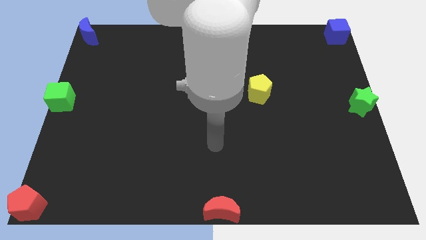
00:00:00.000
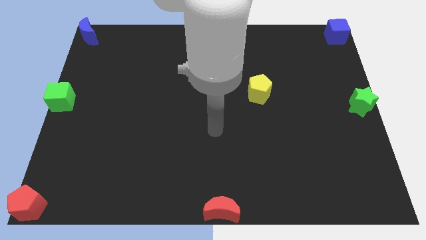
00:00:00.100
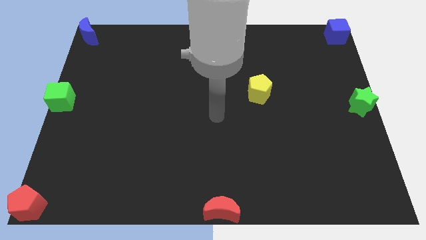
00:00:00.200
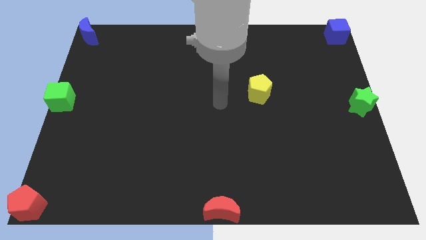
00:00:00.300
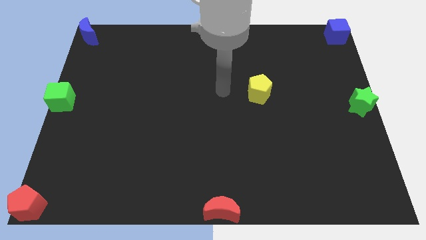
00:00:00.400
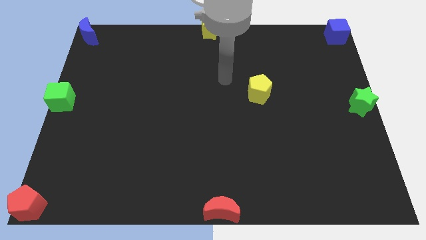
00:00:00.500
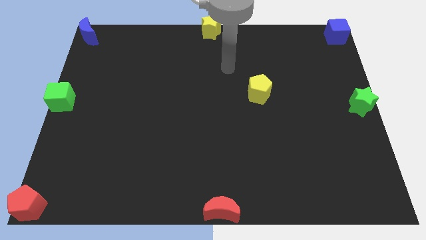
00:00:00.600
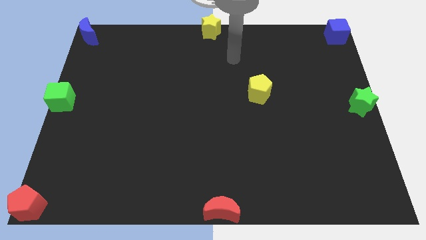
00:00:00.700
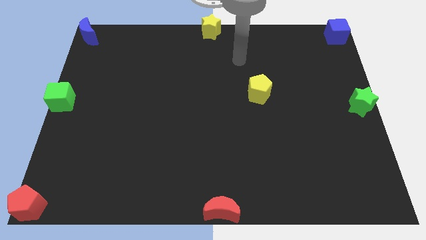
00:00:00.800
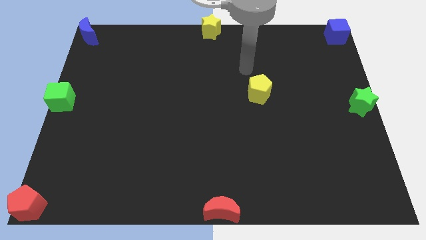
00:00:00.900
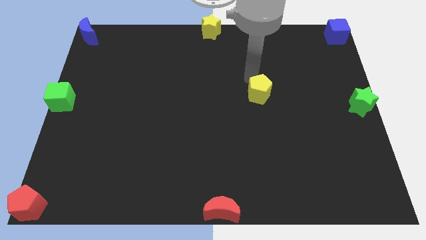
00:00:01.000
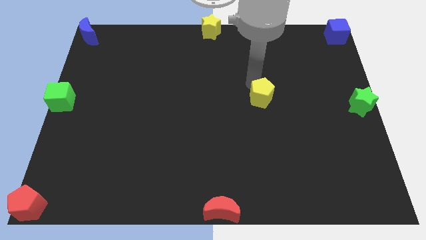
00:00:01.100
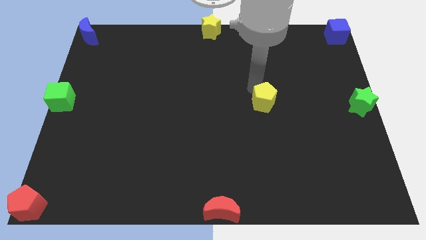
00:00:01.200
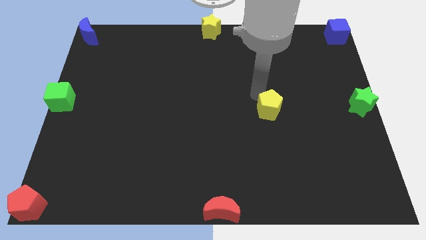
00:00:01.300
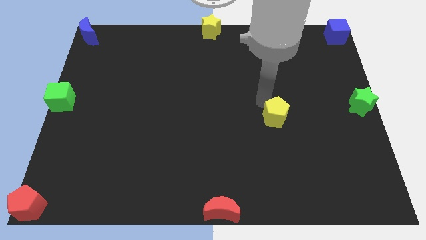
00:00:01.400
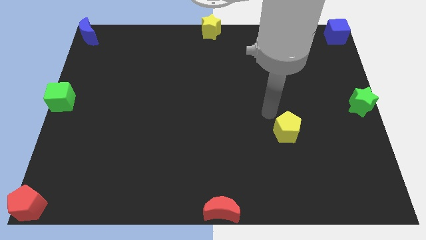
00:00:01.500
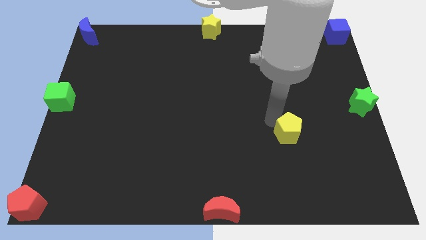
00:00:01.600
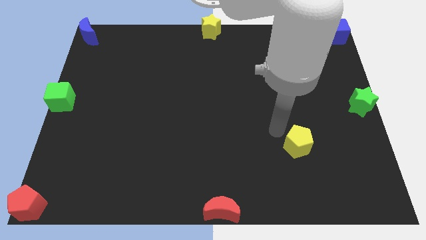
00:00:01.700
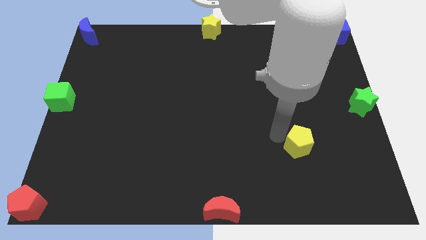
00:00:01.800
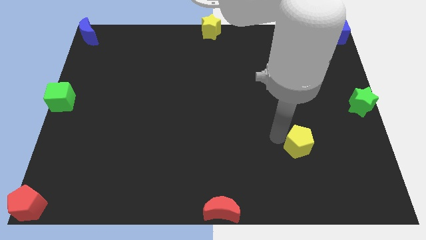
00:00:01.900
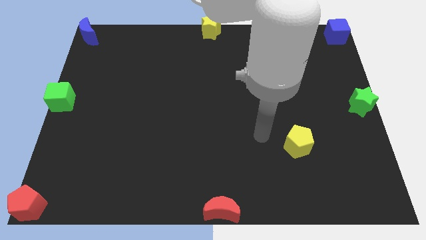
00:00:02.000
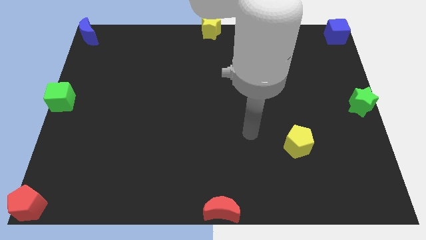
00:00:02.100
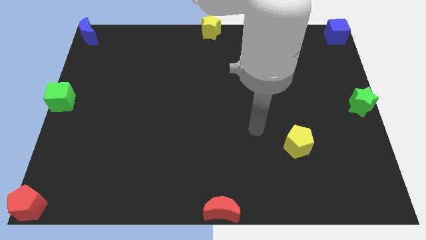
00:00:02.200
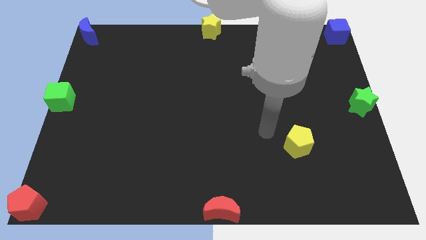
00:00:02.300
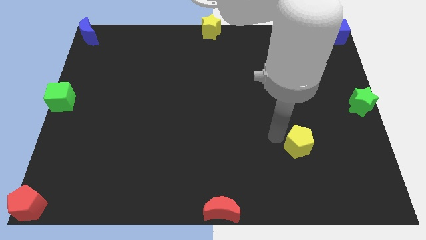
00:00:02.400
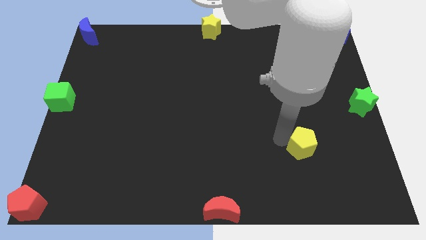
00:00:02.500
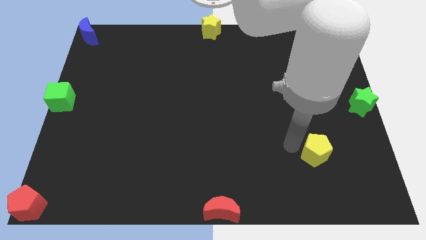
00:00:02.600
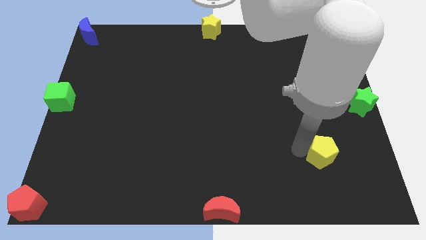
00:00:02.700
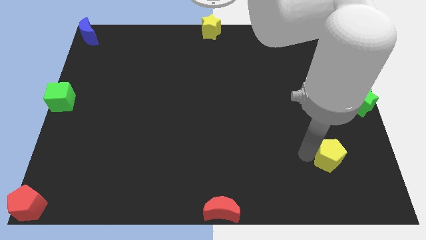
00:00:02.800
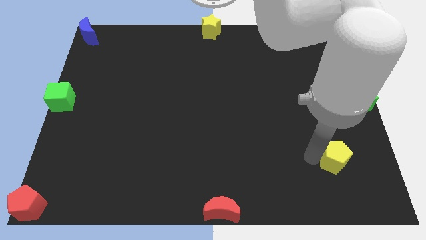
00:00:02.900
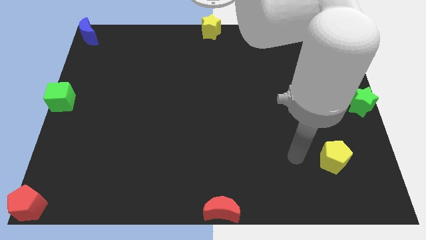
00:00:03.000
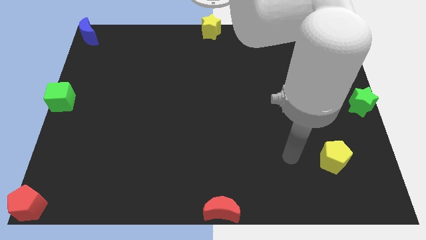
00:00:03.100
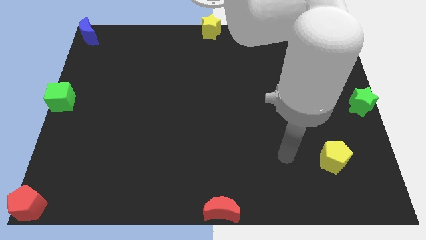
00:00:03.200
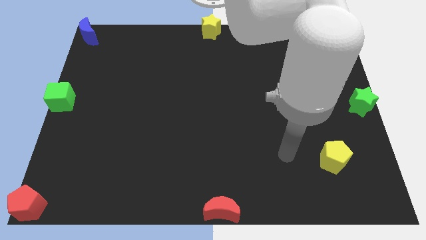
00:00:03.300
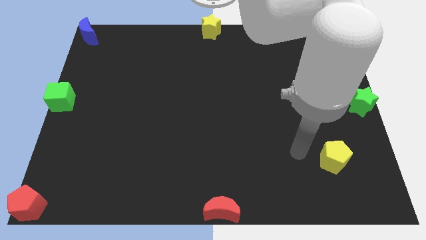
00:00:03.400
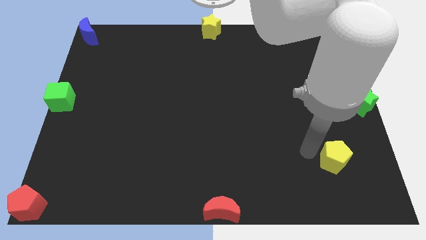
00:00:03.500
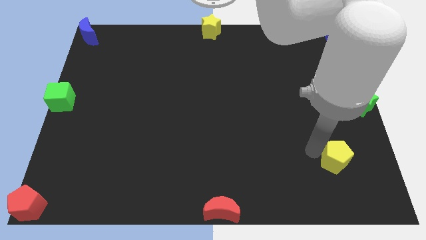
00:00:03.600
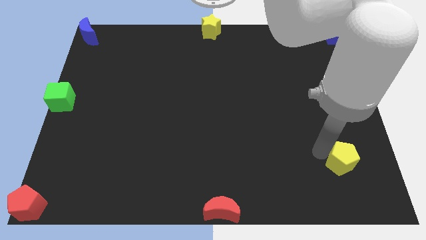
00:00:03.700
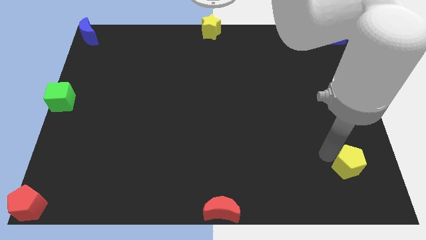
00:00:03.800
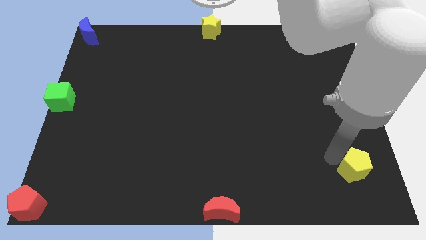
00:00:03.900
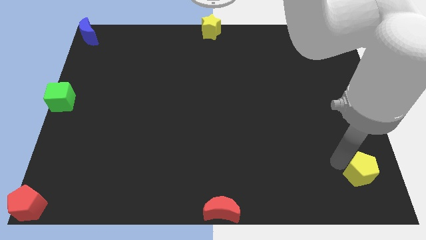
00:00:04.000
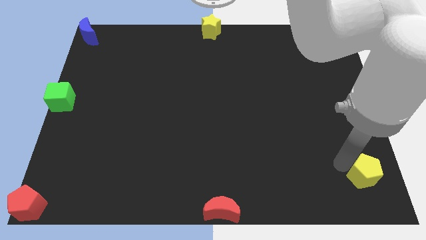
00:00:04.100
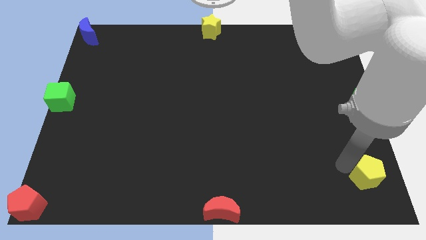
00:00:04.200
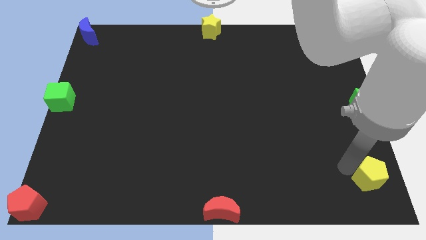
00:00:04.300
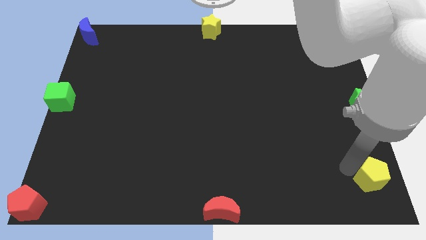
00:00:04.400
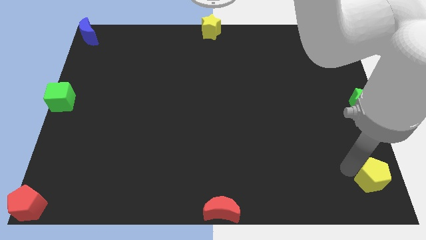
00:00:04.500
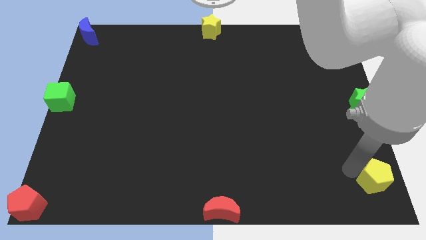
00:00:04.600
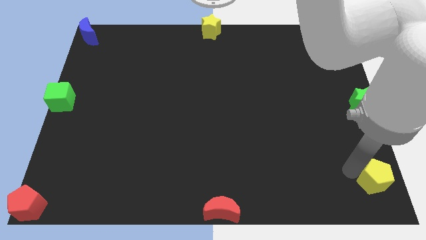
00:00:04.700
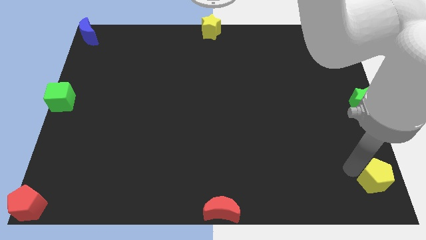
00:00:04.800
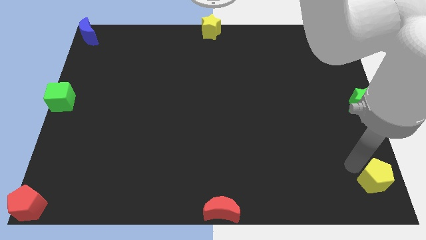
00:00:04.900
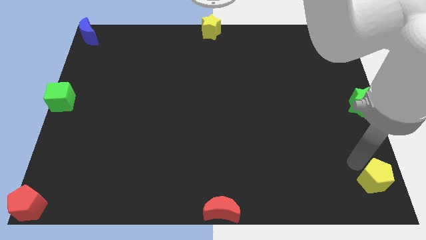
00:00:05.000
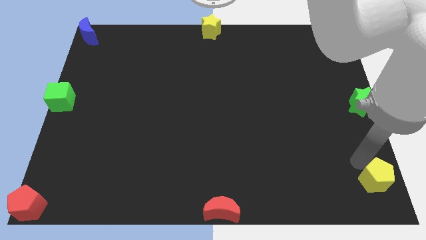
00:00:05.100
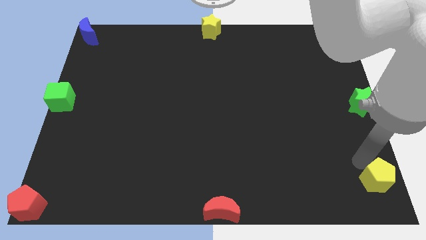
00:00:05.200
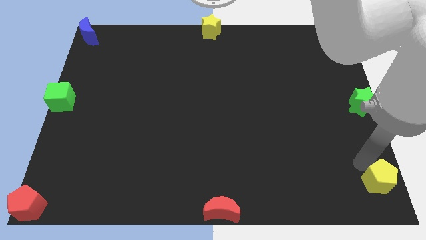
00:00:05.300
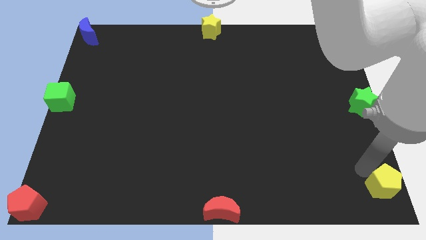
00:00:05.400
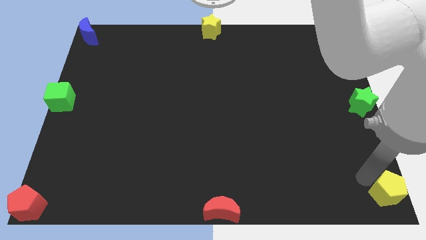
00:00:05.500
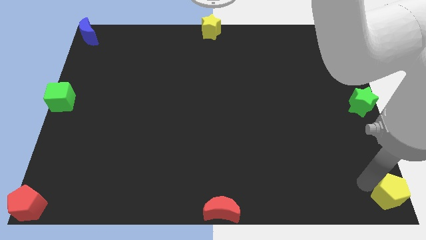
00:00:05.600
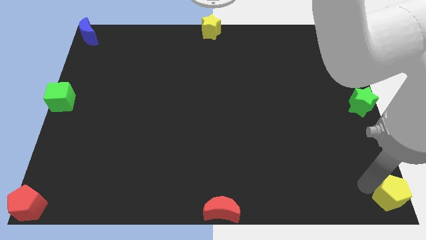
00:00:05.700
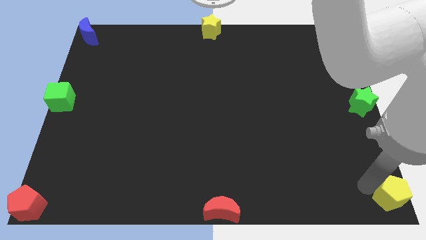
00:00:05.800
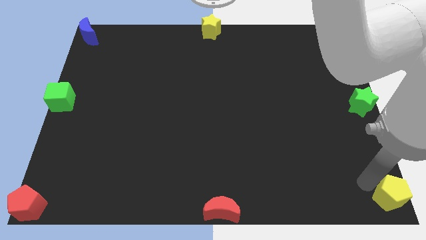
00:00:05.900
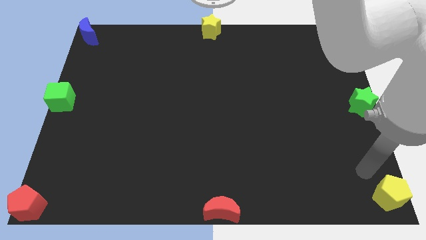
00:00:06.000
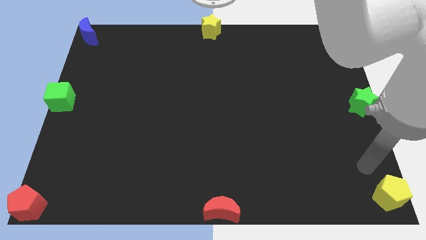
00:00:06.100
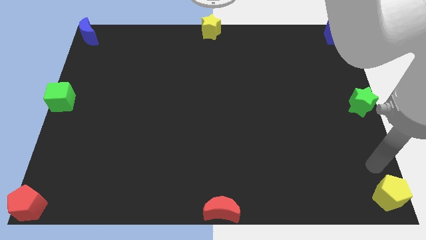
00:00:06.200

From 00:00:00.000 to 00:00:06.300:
push the yellow pentagon to the bottom right side of the board

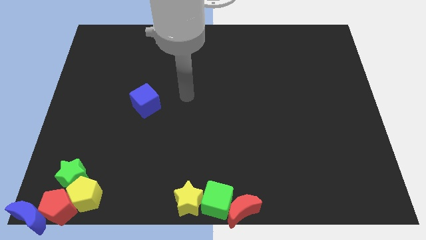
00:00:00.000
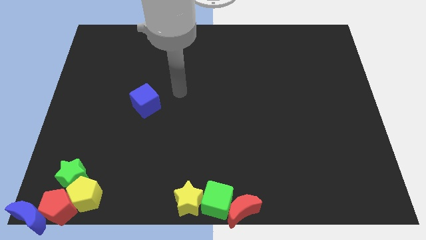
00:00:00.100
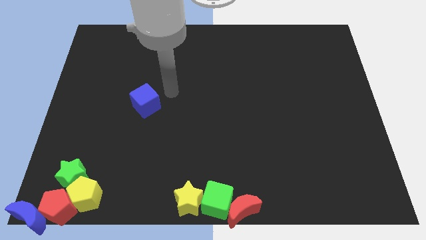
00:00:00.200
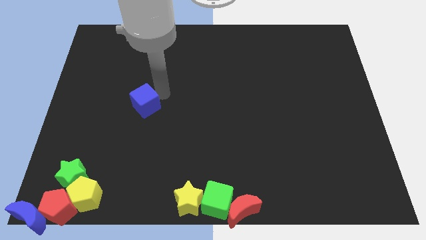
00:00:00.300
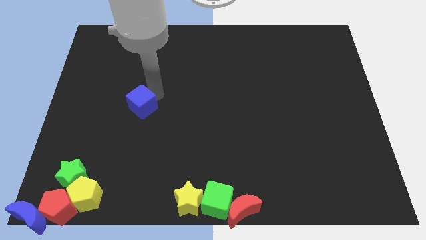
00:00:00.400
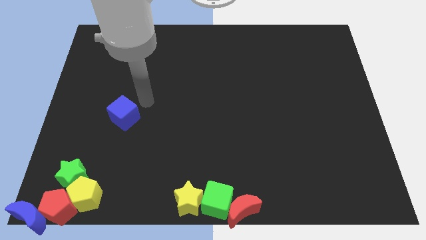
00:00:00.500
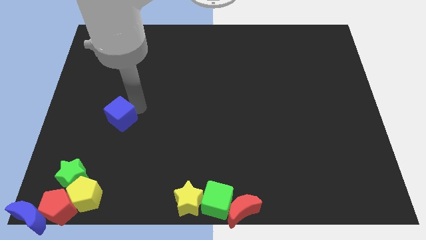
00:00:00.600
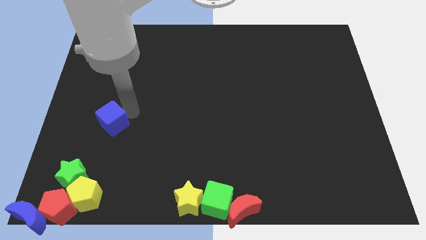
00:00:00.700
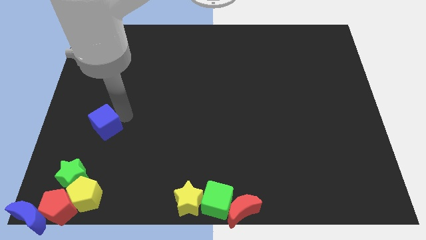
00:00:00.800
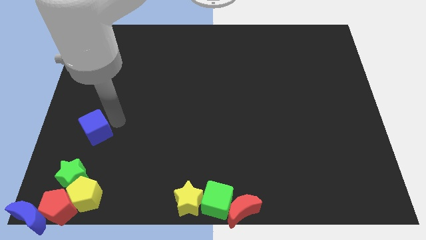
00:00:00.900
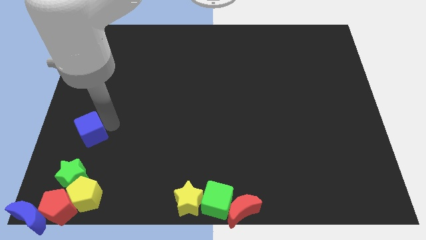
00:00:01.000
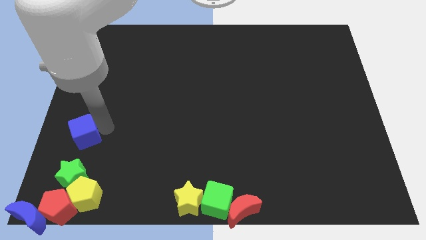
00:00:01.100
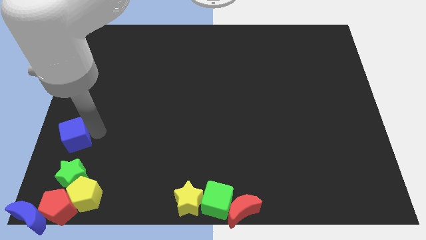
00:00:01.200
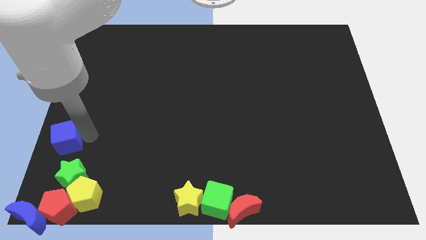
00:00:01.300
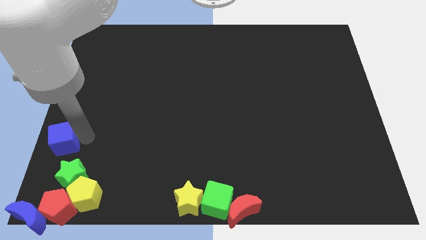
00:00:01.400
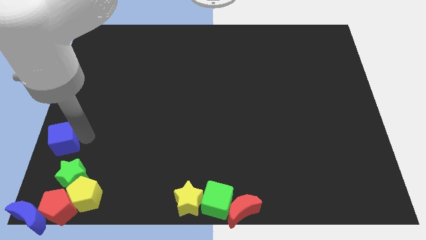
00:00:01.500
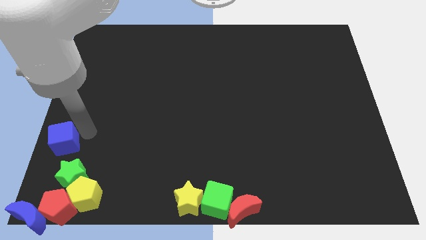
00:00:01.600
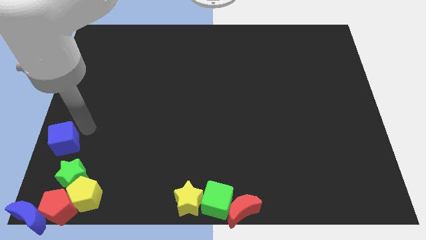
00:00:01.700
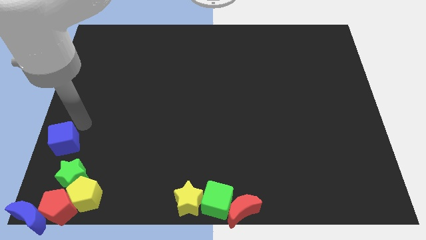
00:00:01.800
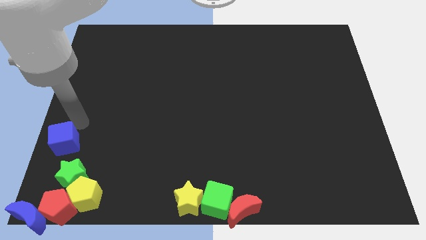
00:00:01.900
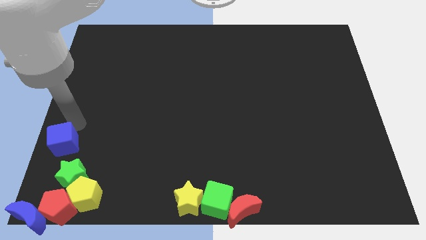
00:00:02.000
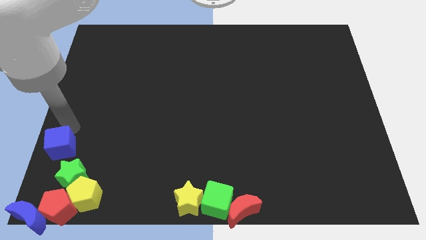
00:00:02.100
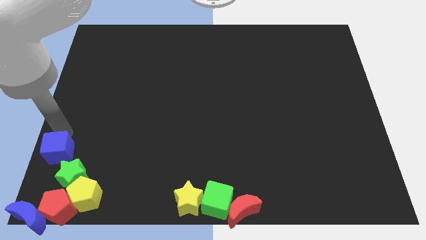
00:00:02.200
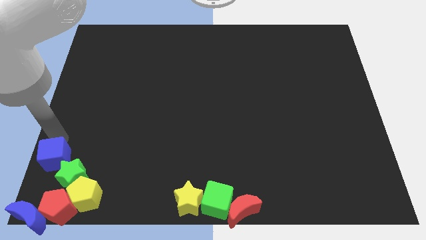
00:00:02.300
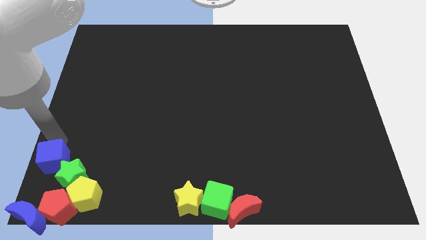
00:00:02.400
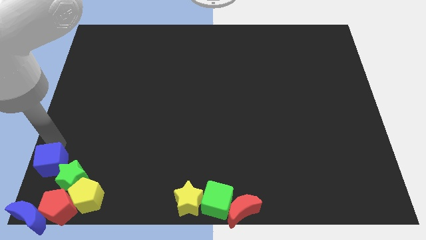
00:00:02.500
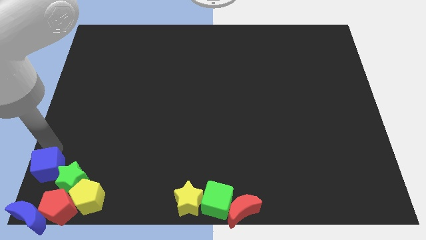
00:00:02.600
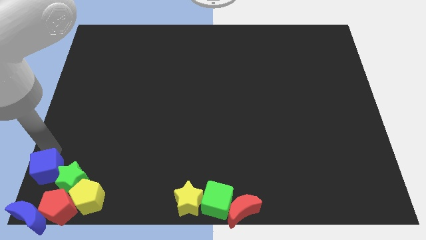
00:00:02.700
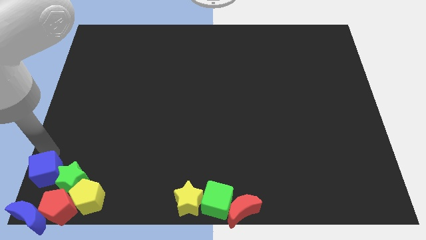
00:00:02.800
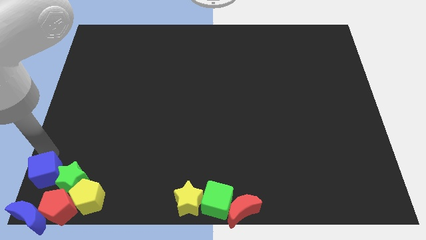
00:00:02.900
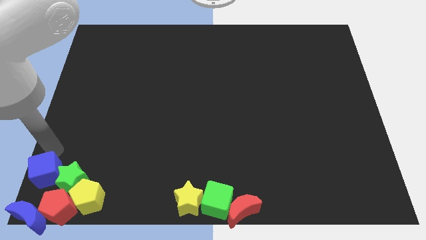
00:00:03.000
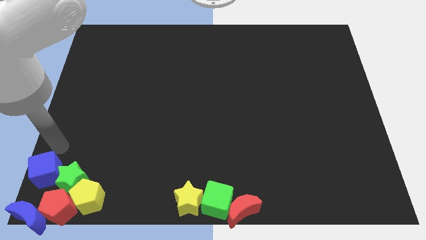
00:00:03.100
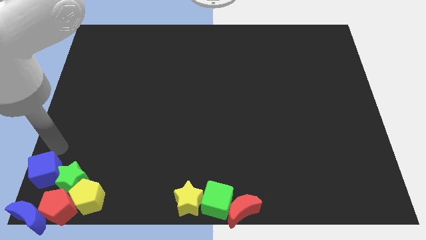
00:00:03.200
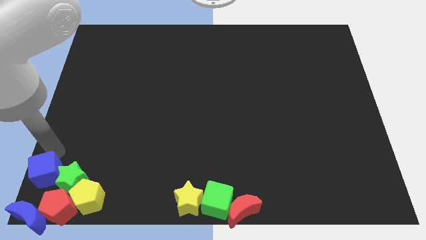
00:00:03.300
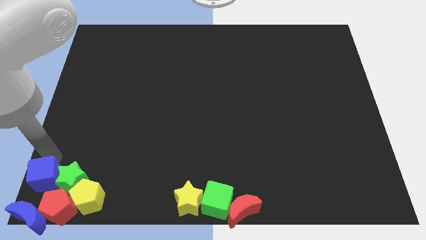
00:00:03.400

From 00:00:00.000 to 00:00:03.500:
move the blue cube to the left of green star
